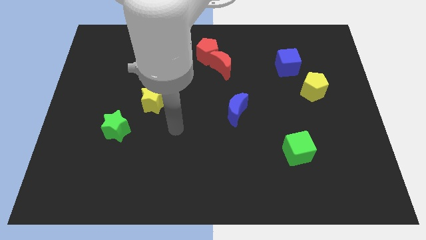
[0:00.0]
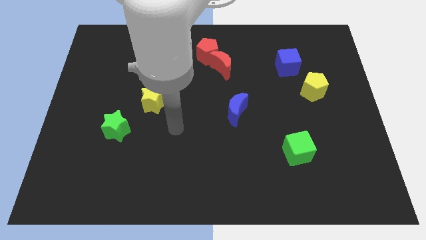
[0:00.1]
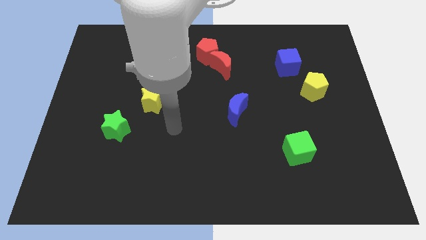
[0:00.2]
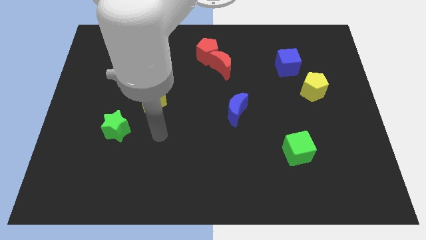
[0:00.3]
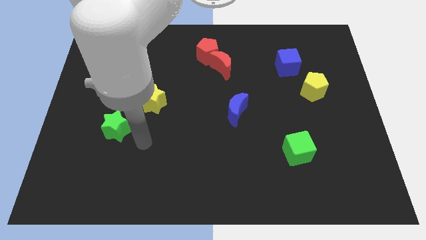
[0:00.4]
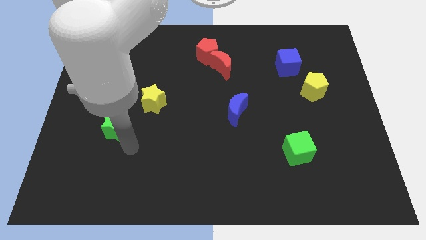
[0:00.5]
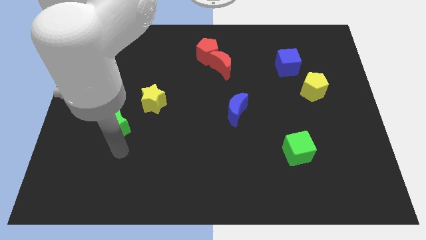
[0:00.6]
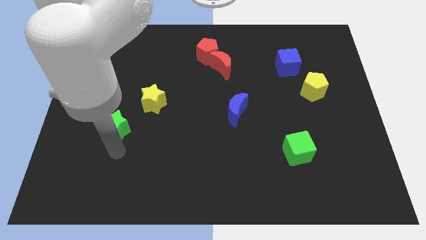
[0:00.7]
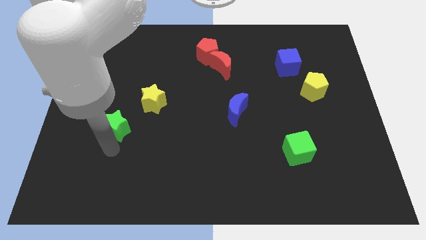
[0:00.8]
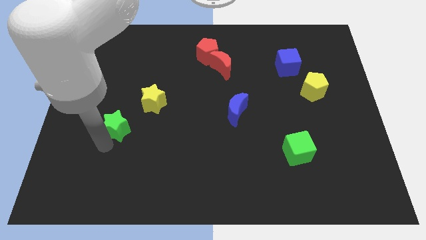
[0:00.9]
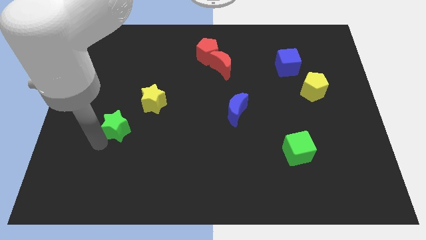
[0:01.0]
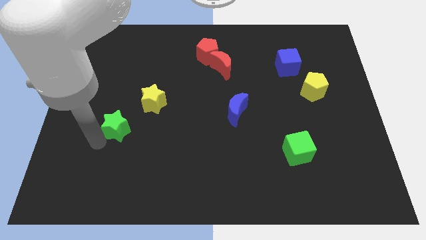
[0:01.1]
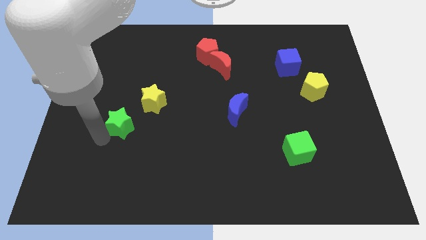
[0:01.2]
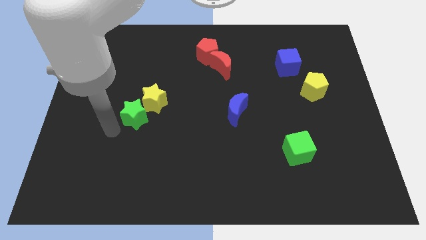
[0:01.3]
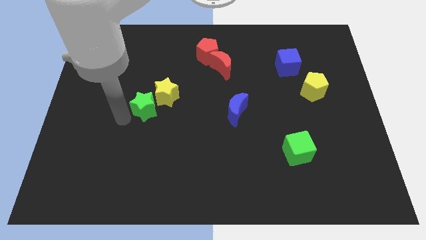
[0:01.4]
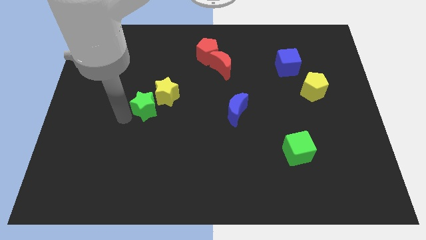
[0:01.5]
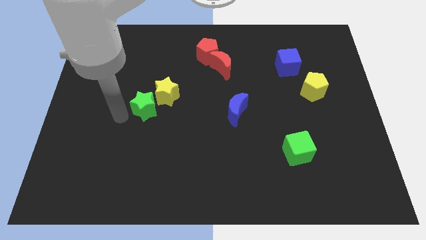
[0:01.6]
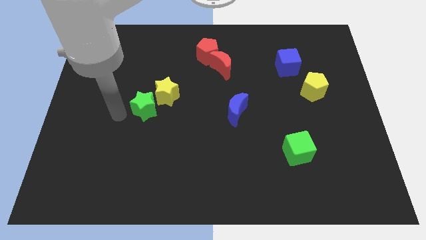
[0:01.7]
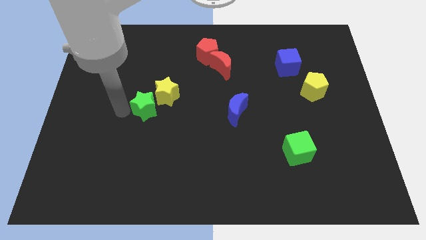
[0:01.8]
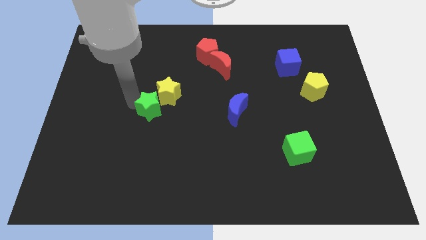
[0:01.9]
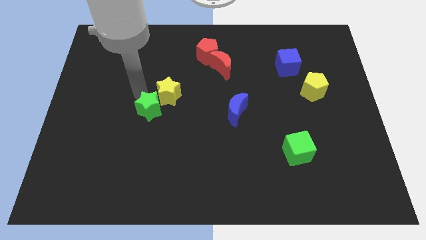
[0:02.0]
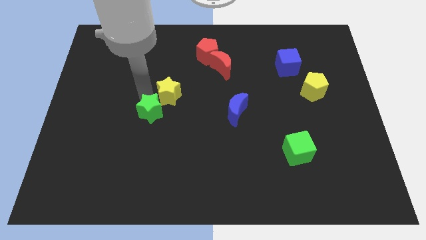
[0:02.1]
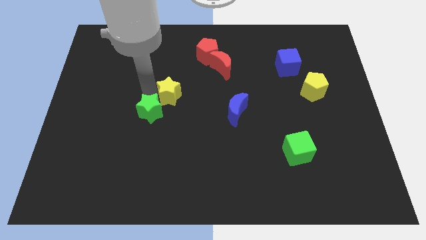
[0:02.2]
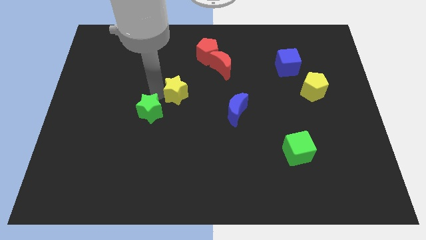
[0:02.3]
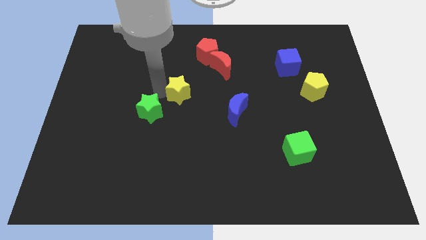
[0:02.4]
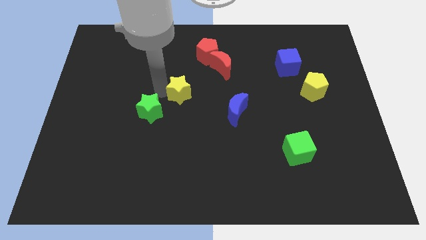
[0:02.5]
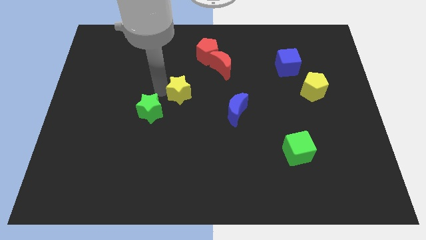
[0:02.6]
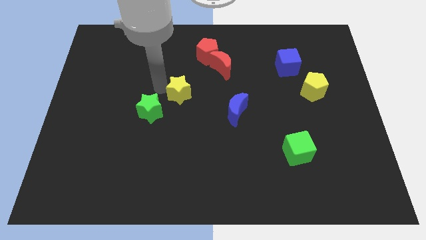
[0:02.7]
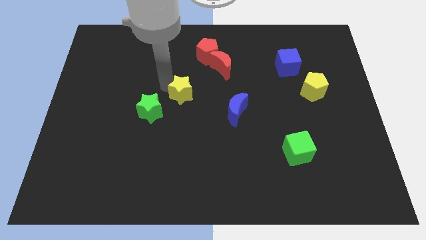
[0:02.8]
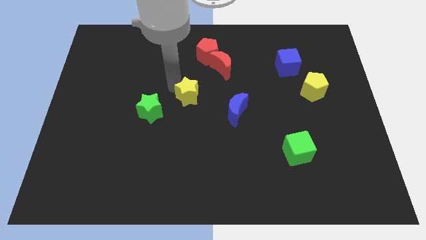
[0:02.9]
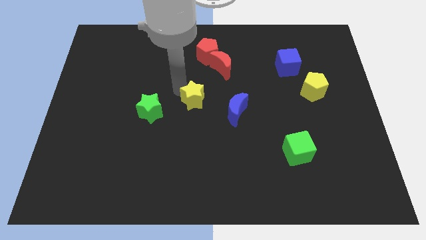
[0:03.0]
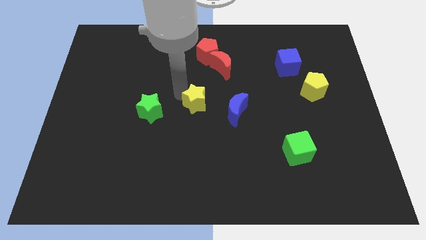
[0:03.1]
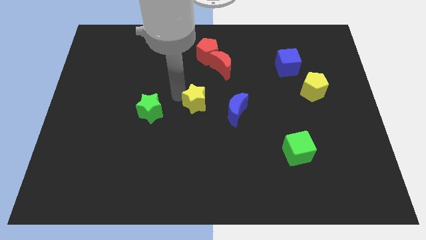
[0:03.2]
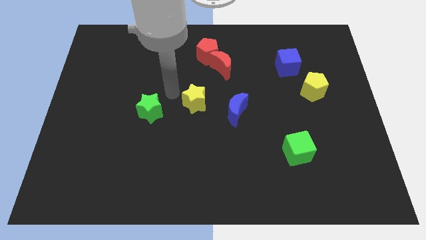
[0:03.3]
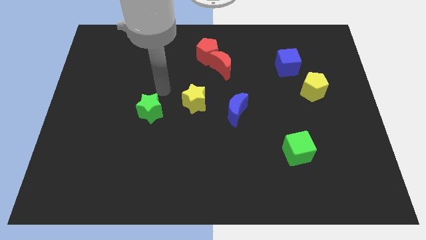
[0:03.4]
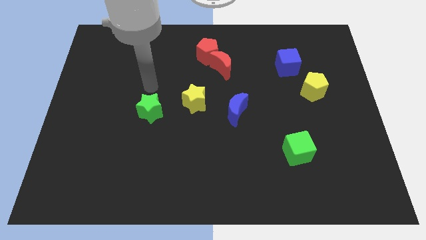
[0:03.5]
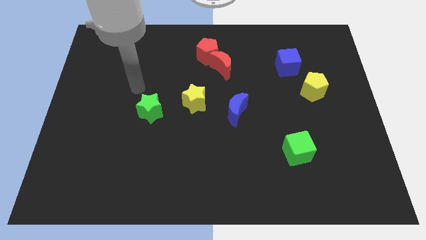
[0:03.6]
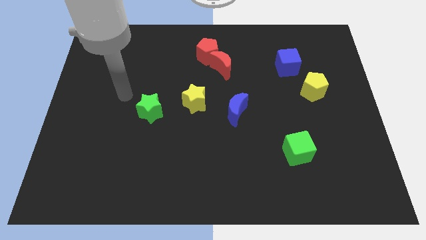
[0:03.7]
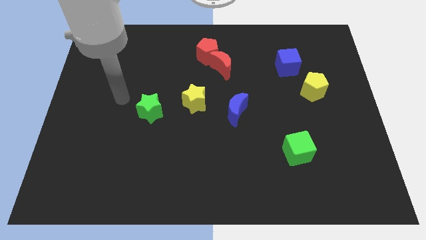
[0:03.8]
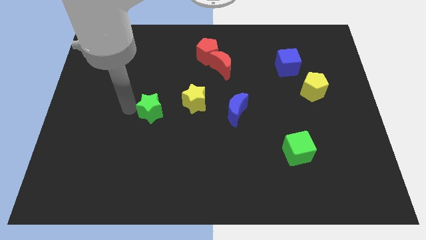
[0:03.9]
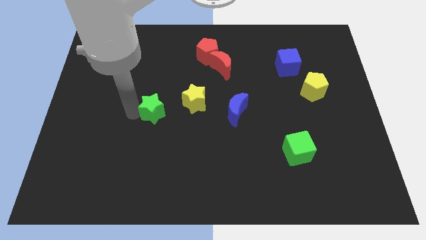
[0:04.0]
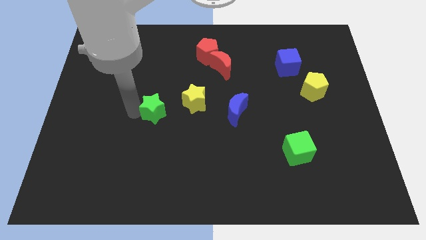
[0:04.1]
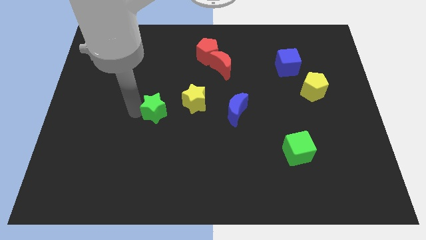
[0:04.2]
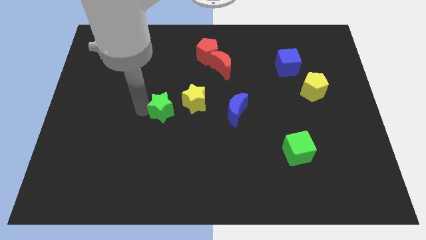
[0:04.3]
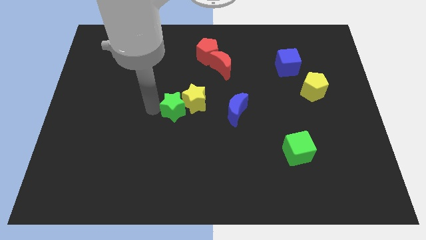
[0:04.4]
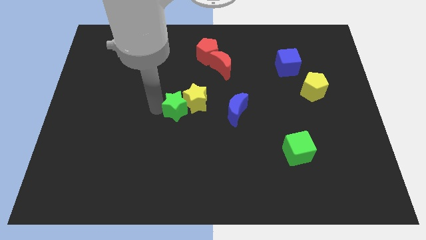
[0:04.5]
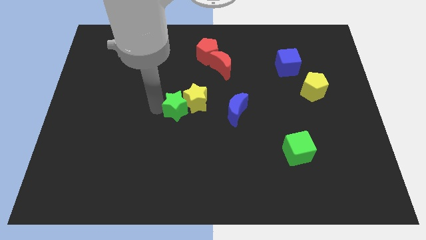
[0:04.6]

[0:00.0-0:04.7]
push green star towards yellow star

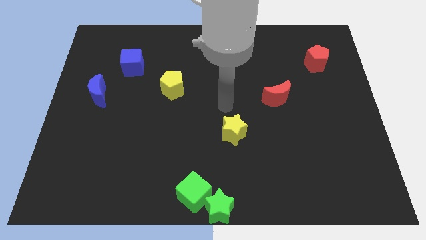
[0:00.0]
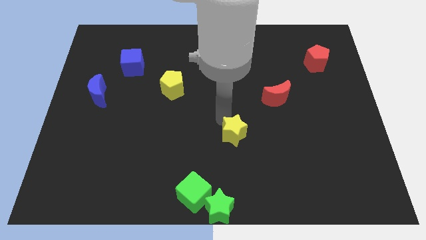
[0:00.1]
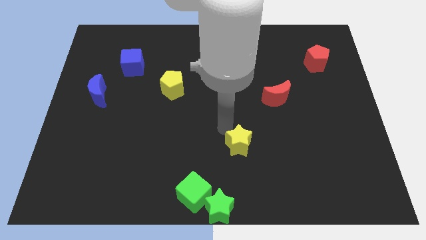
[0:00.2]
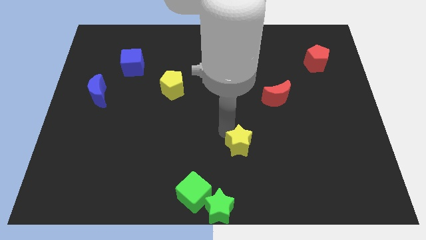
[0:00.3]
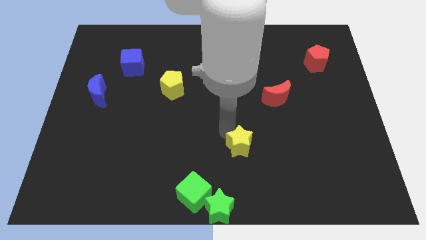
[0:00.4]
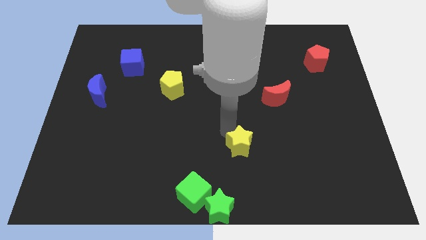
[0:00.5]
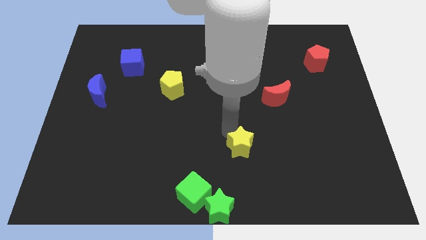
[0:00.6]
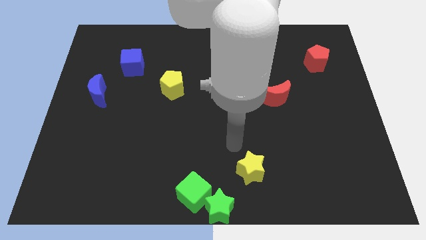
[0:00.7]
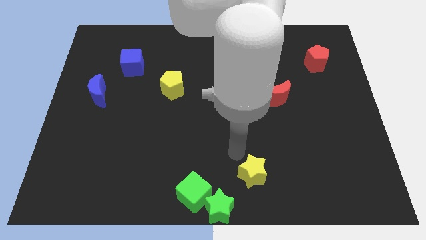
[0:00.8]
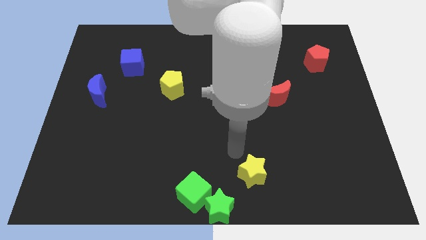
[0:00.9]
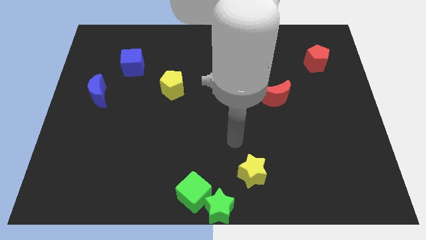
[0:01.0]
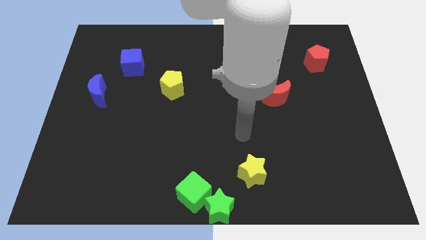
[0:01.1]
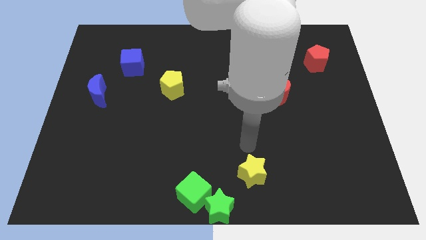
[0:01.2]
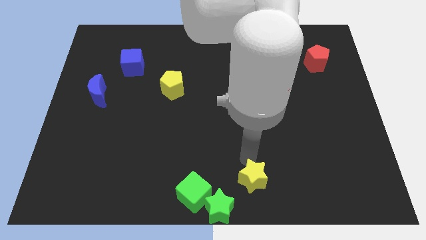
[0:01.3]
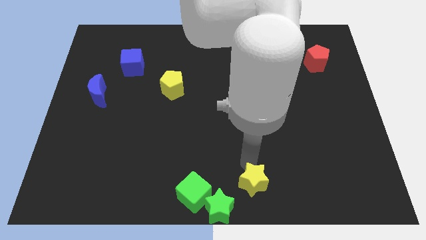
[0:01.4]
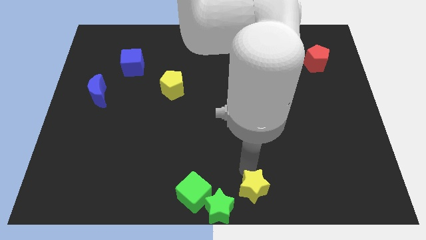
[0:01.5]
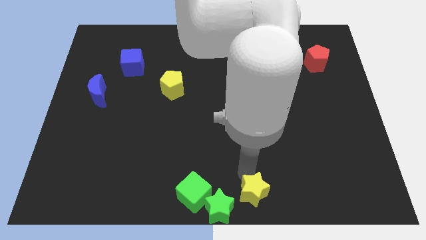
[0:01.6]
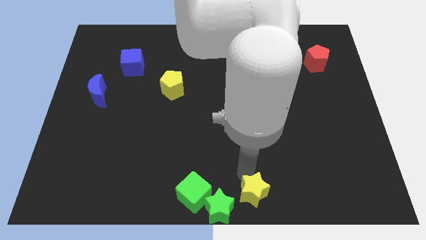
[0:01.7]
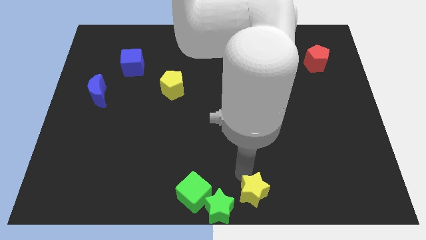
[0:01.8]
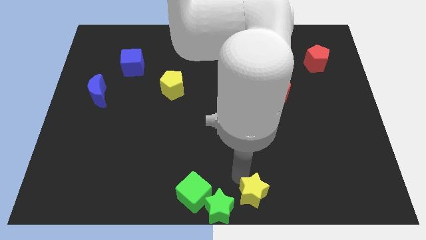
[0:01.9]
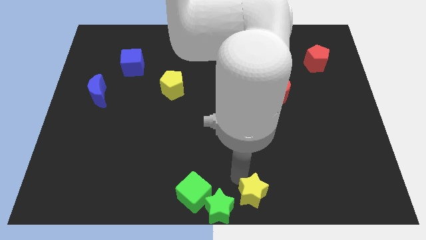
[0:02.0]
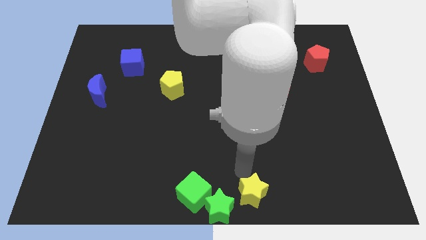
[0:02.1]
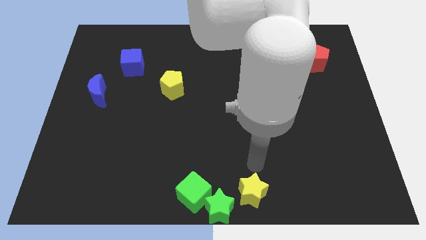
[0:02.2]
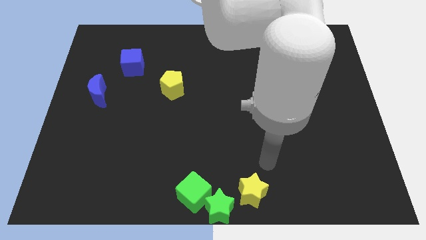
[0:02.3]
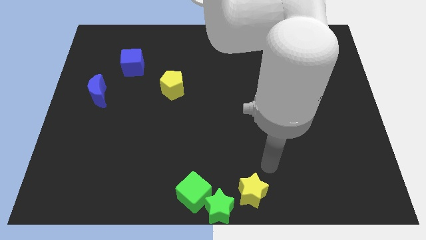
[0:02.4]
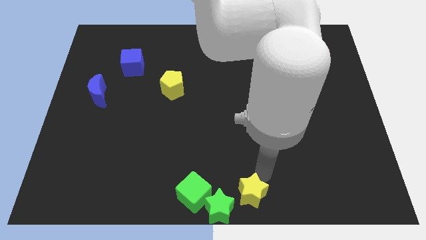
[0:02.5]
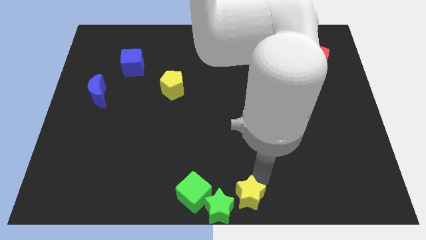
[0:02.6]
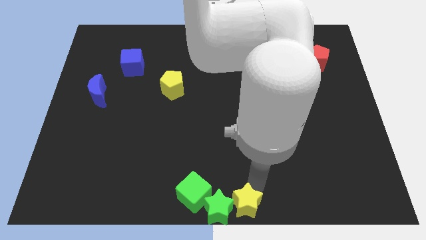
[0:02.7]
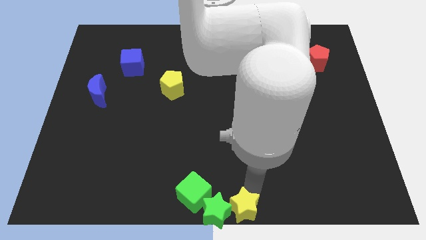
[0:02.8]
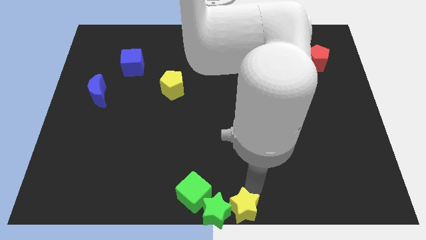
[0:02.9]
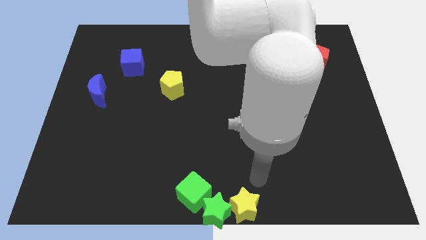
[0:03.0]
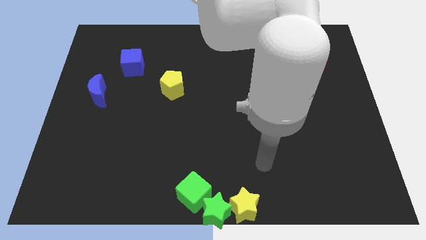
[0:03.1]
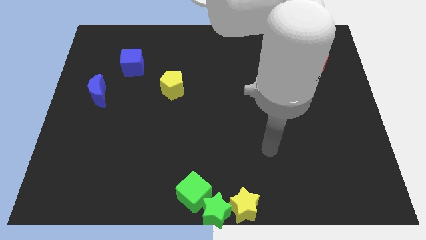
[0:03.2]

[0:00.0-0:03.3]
push the yellow star to the right of the green star

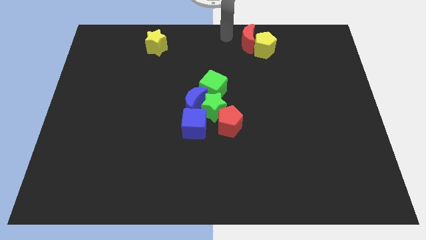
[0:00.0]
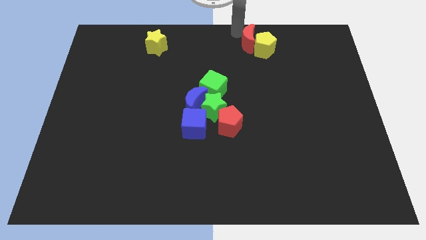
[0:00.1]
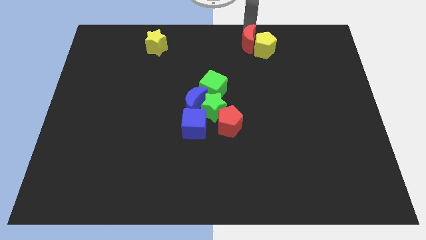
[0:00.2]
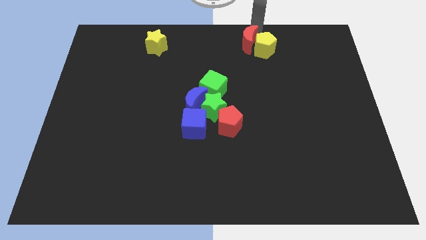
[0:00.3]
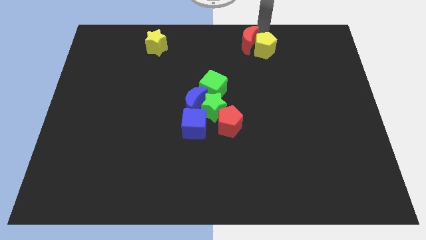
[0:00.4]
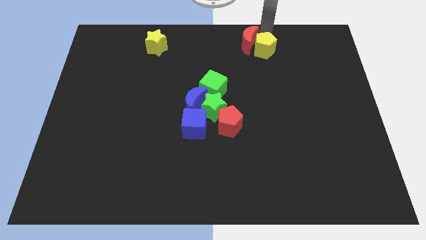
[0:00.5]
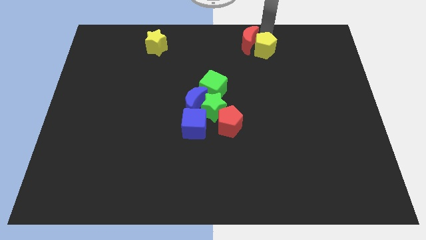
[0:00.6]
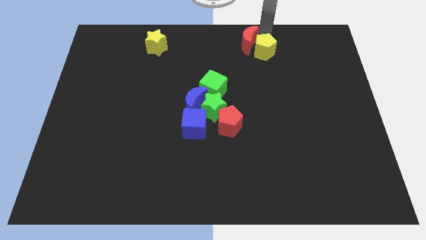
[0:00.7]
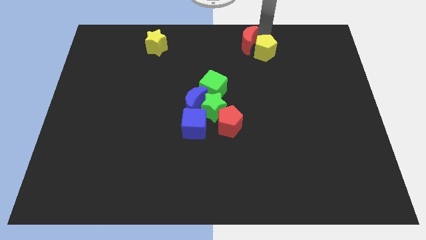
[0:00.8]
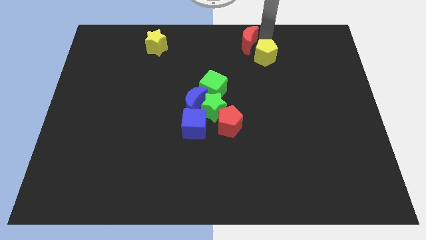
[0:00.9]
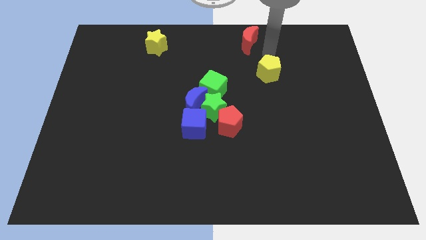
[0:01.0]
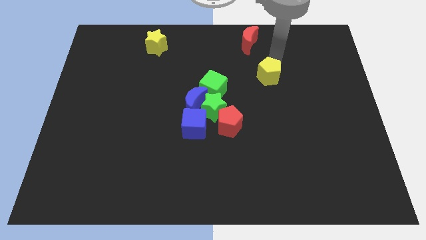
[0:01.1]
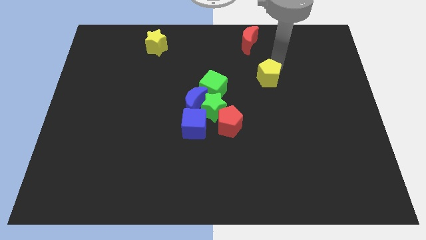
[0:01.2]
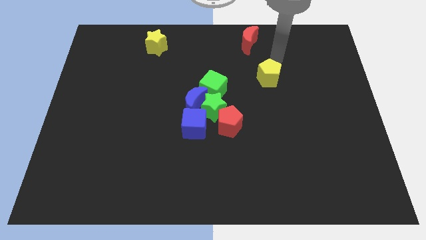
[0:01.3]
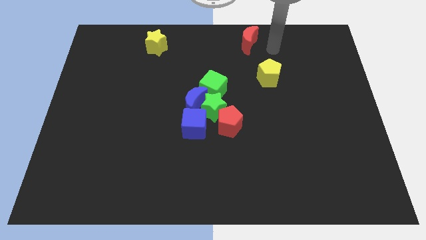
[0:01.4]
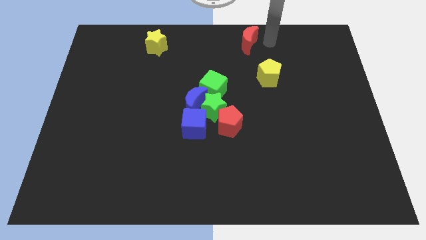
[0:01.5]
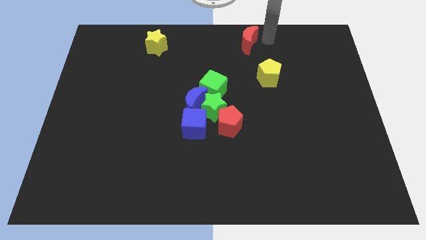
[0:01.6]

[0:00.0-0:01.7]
separate yellow pentagon from the red crescent
